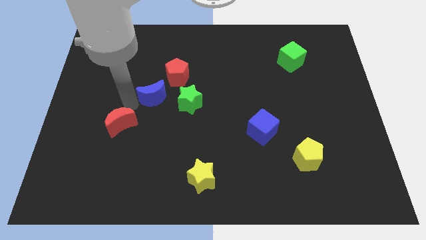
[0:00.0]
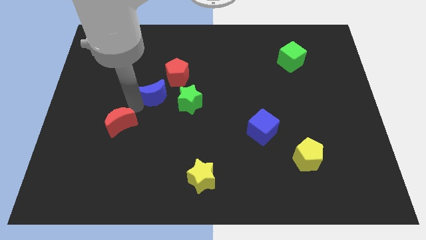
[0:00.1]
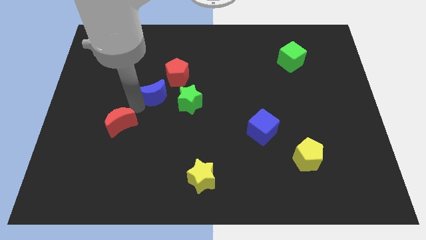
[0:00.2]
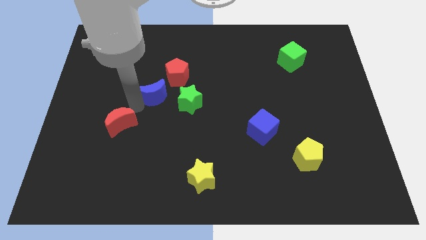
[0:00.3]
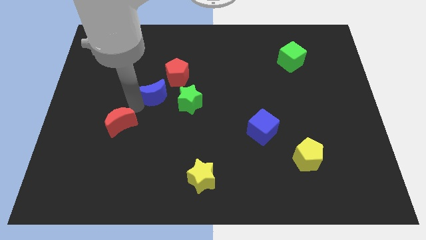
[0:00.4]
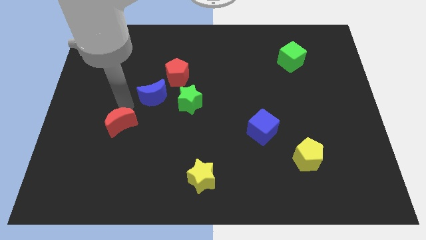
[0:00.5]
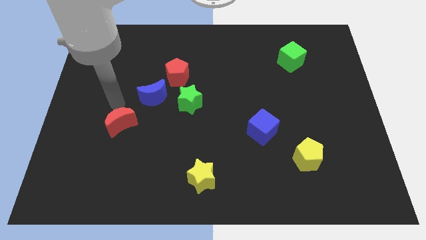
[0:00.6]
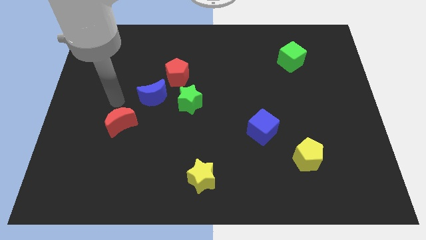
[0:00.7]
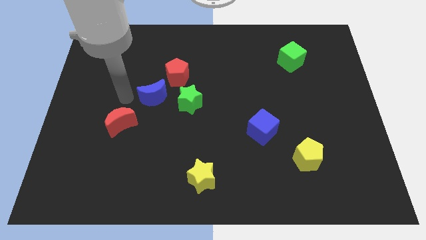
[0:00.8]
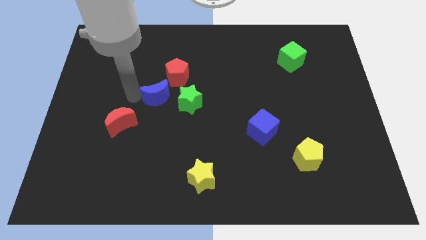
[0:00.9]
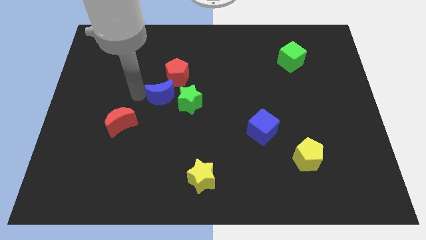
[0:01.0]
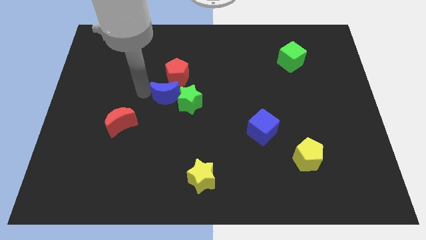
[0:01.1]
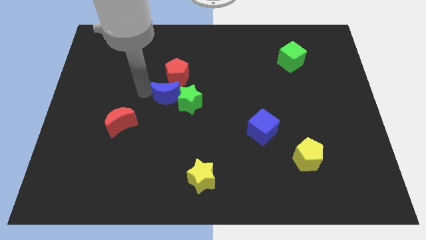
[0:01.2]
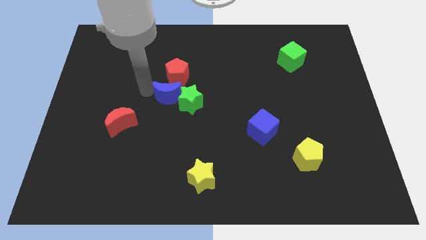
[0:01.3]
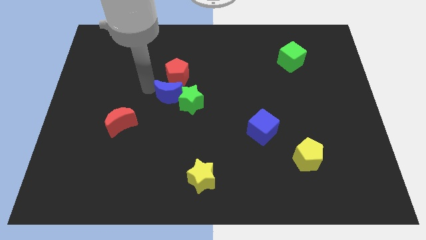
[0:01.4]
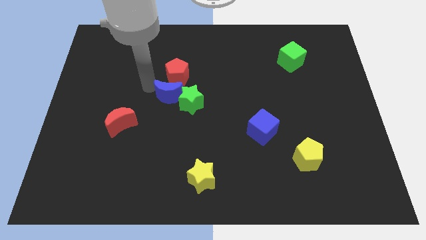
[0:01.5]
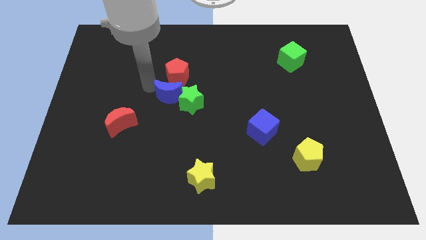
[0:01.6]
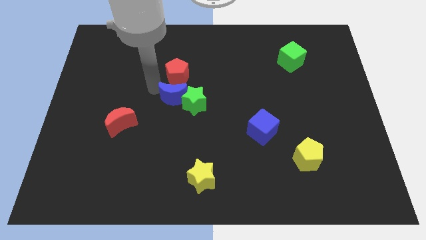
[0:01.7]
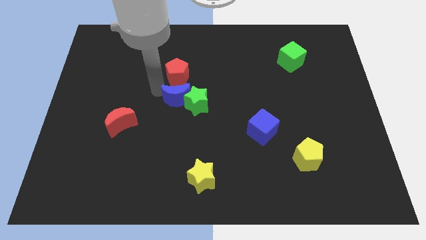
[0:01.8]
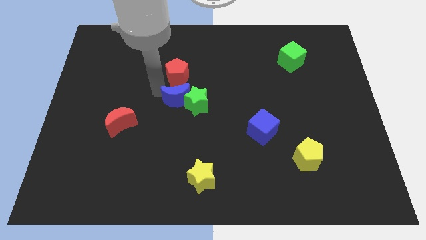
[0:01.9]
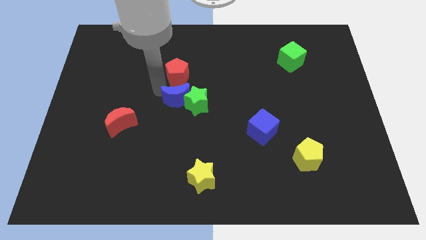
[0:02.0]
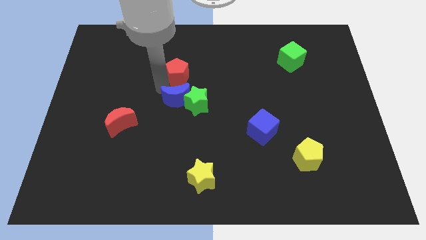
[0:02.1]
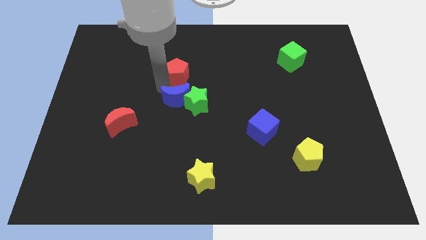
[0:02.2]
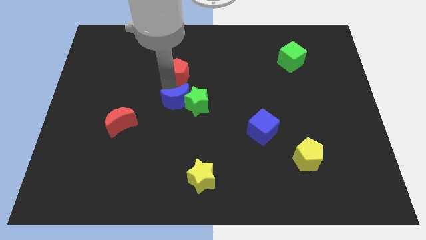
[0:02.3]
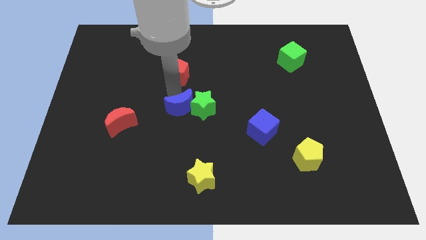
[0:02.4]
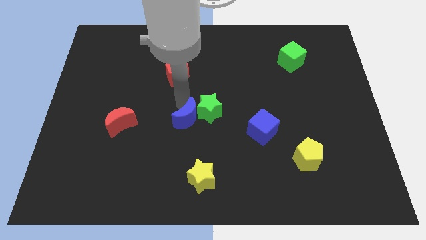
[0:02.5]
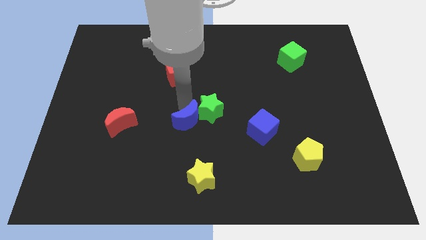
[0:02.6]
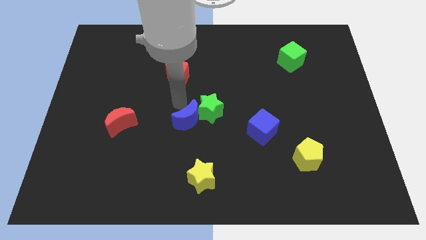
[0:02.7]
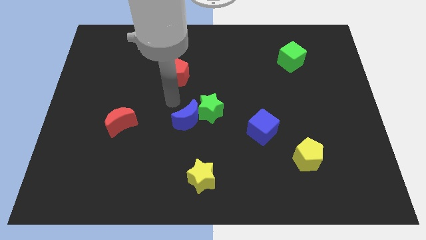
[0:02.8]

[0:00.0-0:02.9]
place the blue moon and green star vertically above the yellow star

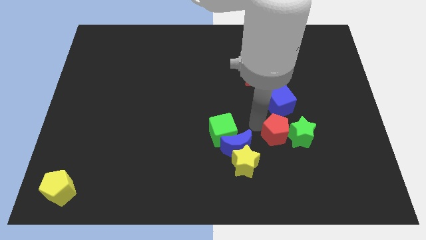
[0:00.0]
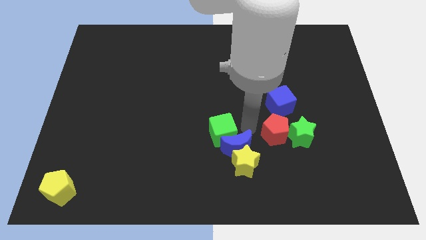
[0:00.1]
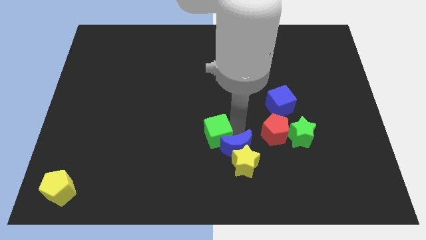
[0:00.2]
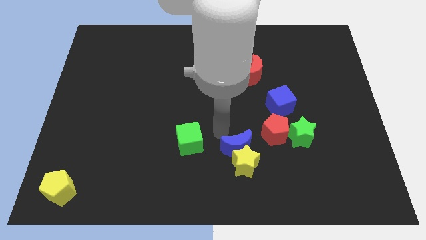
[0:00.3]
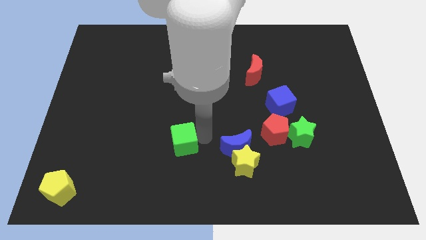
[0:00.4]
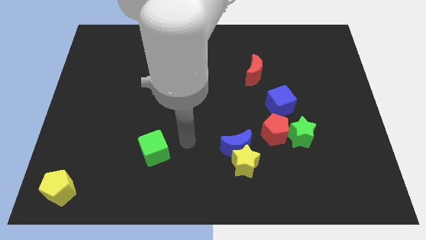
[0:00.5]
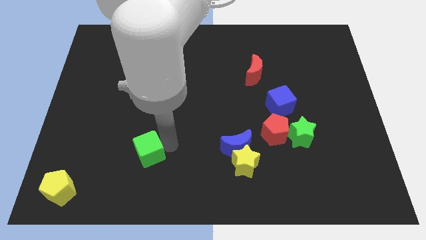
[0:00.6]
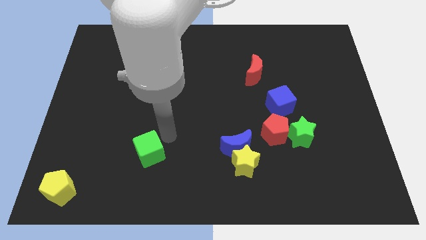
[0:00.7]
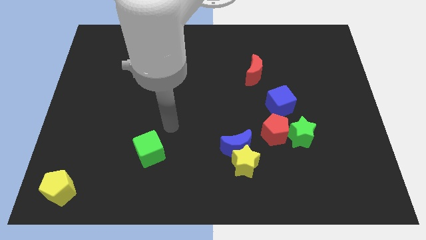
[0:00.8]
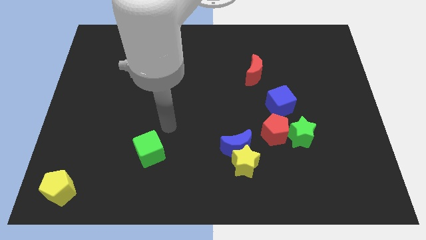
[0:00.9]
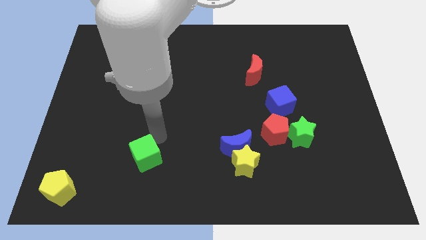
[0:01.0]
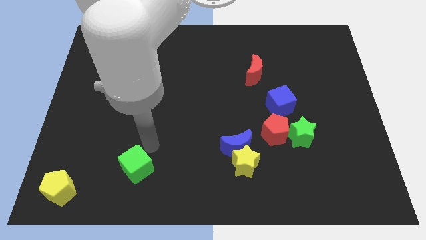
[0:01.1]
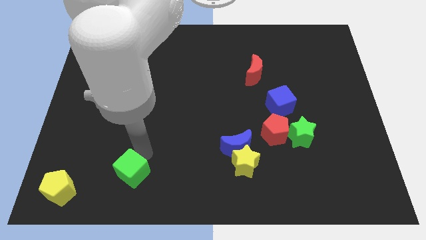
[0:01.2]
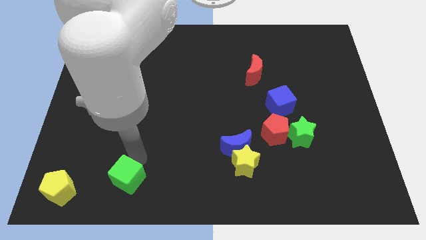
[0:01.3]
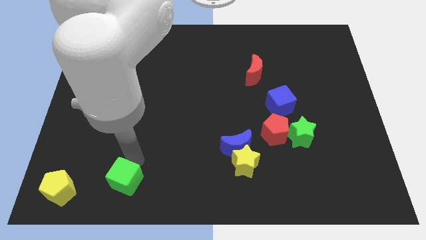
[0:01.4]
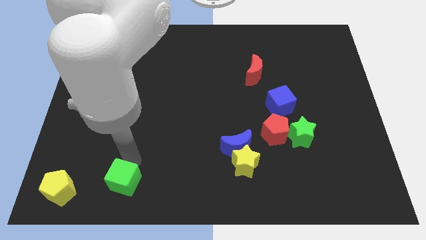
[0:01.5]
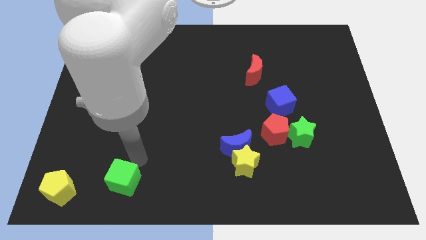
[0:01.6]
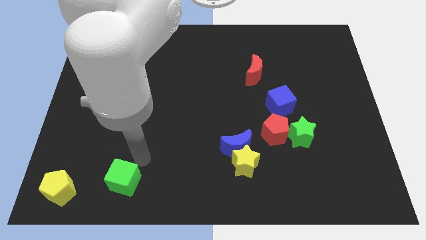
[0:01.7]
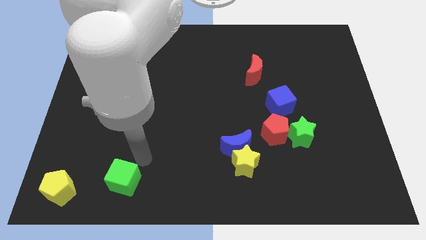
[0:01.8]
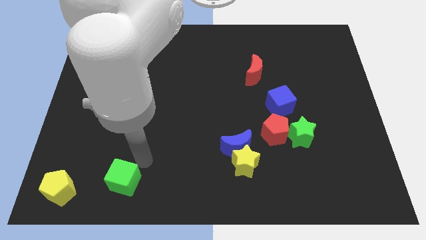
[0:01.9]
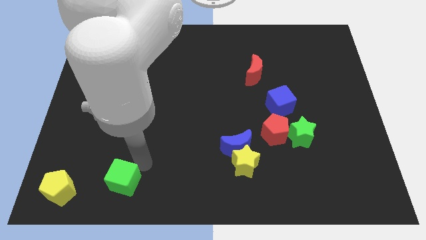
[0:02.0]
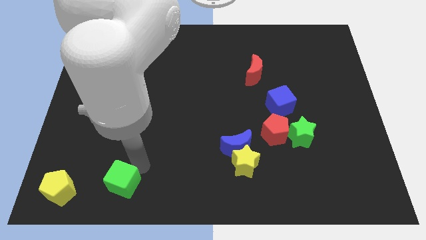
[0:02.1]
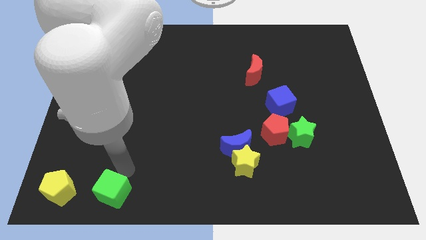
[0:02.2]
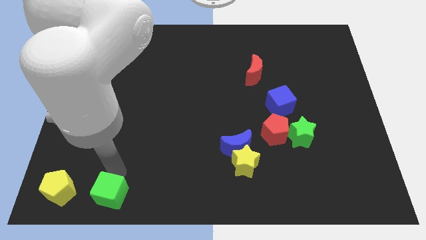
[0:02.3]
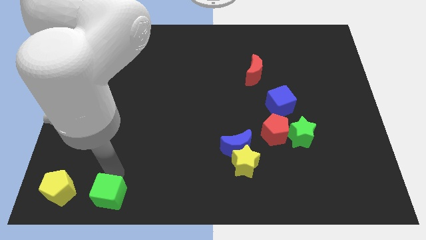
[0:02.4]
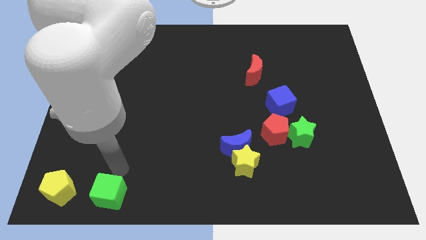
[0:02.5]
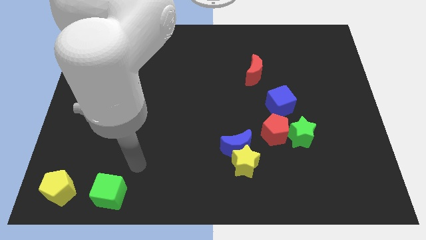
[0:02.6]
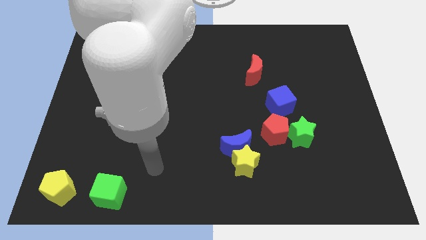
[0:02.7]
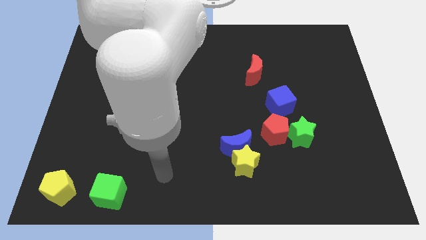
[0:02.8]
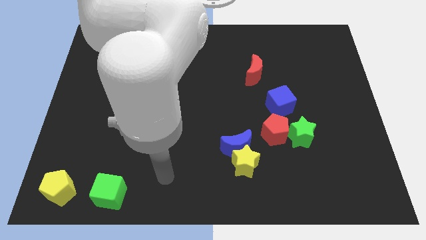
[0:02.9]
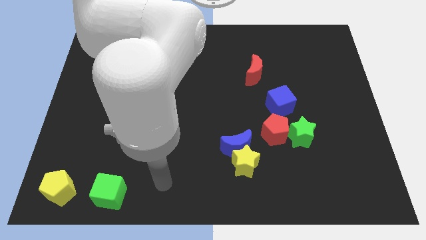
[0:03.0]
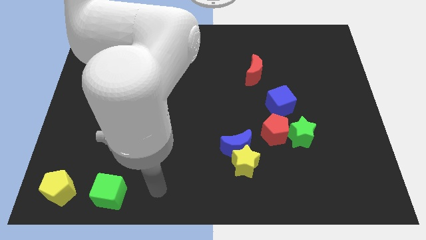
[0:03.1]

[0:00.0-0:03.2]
place the green cube to the right of the yellow pentagon

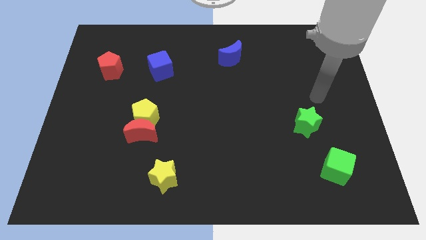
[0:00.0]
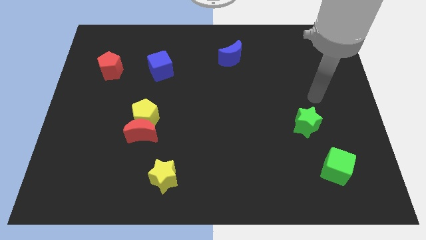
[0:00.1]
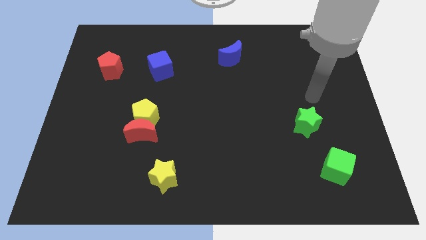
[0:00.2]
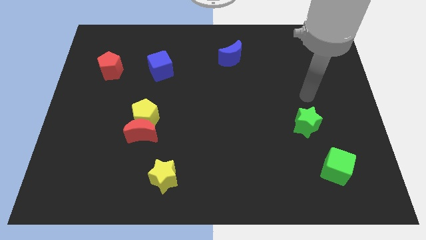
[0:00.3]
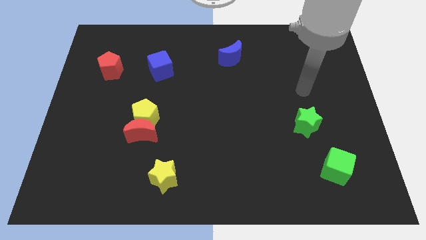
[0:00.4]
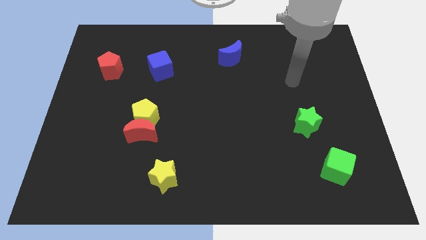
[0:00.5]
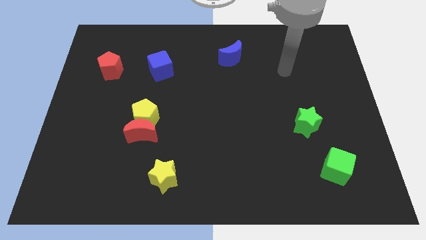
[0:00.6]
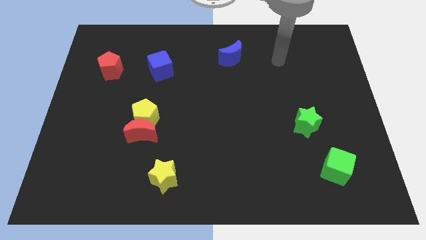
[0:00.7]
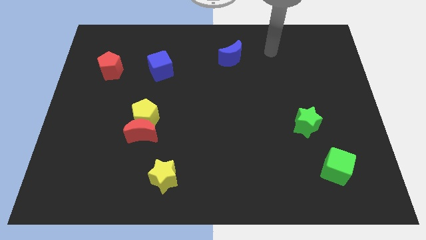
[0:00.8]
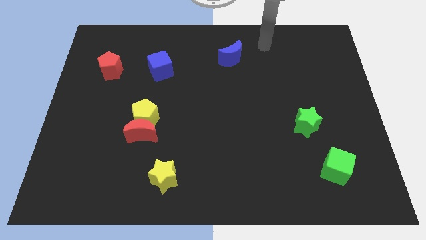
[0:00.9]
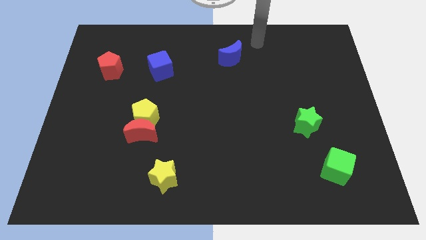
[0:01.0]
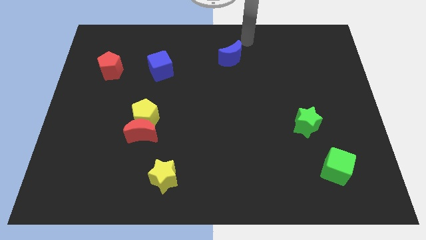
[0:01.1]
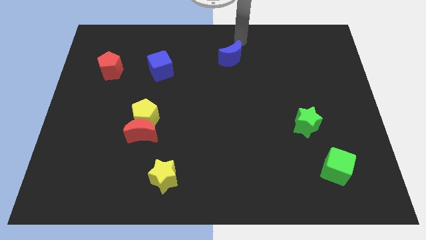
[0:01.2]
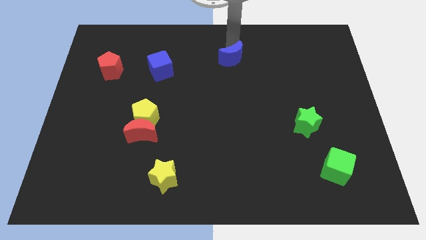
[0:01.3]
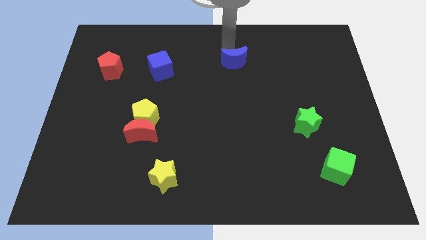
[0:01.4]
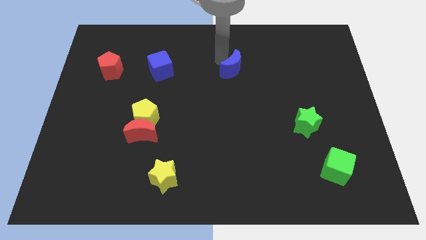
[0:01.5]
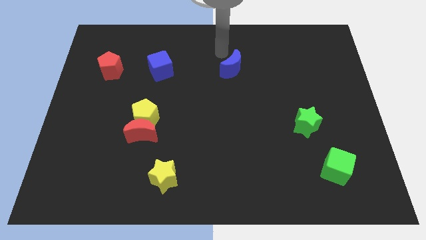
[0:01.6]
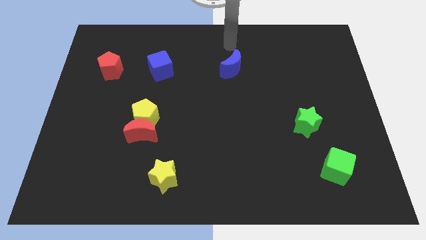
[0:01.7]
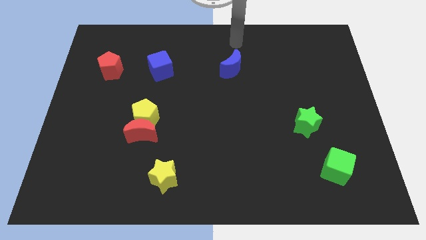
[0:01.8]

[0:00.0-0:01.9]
slightly push the blue moon to the right of blue cube

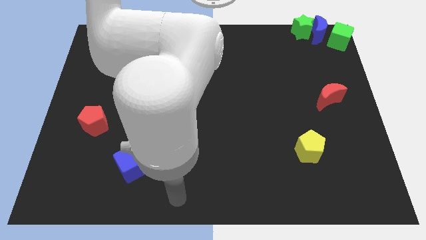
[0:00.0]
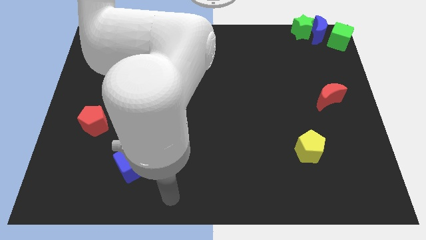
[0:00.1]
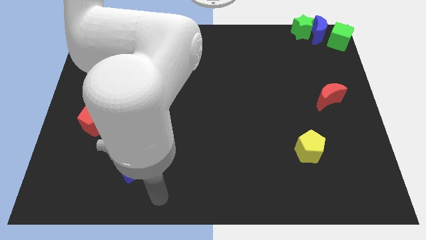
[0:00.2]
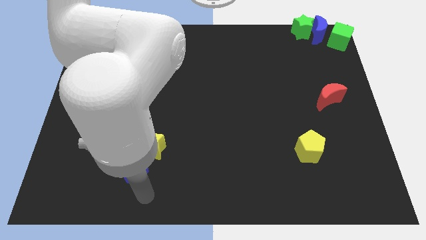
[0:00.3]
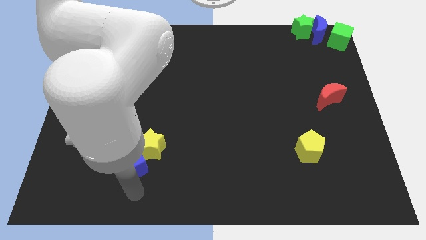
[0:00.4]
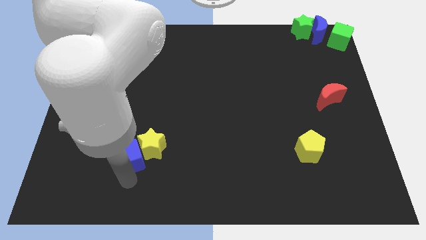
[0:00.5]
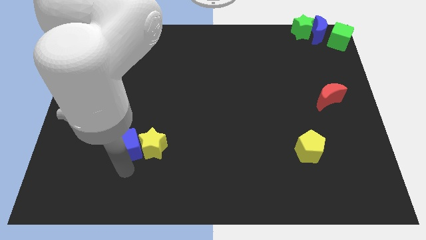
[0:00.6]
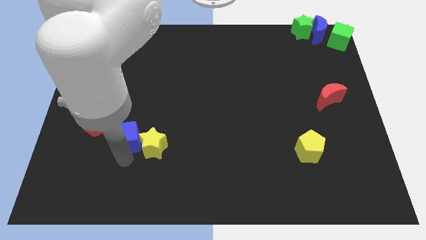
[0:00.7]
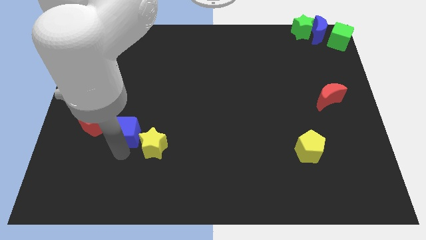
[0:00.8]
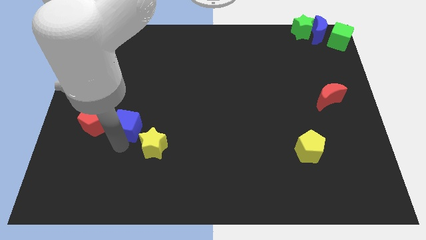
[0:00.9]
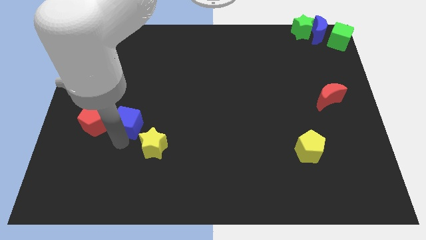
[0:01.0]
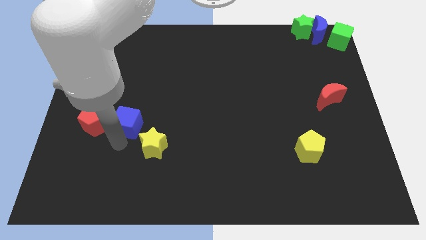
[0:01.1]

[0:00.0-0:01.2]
place blue cube in between the yellow star and red pentagon
